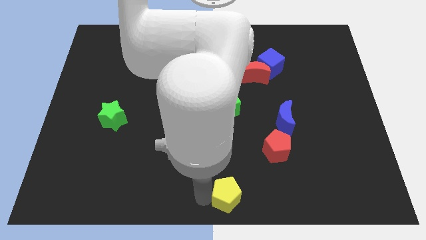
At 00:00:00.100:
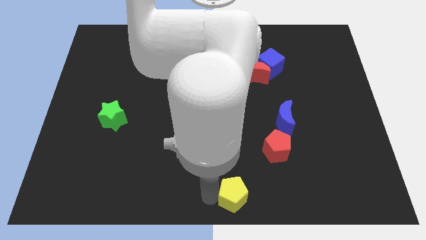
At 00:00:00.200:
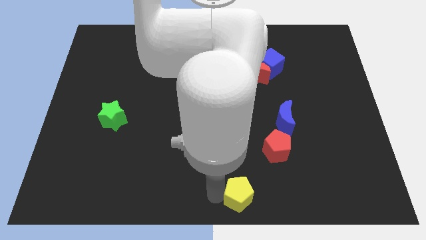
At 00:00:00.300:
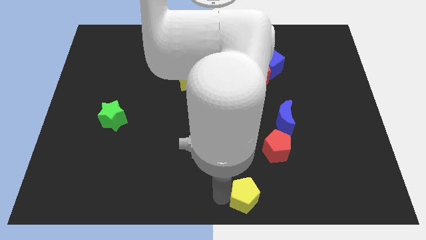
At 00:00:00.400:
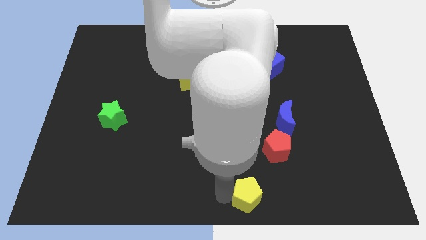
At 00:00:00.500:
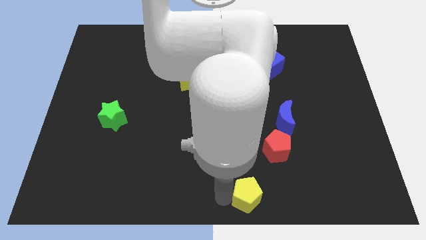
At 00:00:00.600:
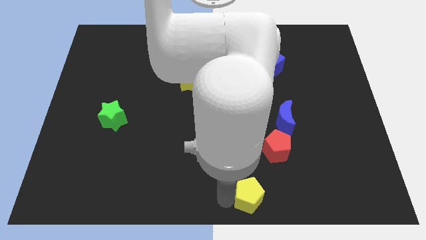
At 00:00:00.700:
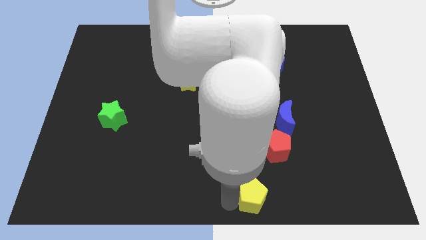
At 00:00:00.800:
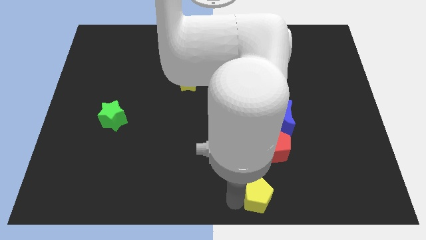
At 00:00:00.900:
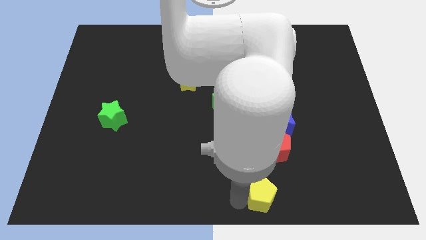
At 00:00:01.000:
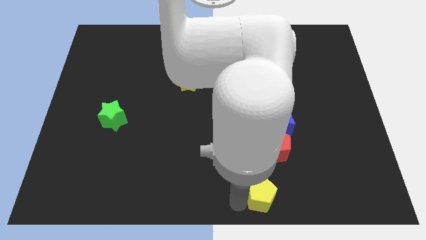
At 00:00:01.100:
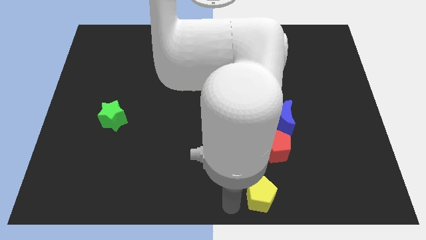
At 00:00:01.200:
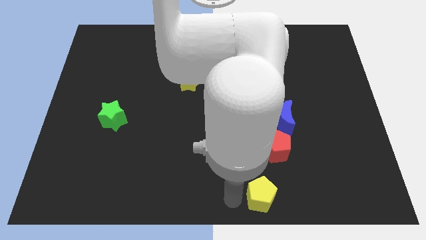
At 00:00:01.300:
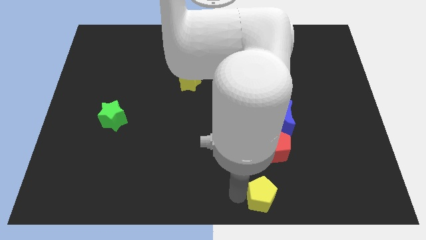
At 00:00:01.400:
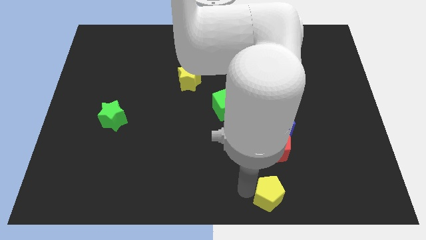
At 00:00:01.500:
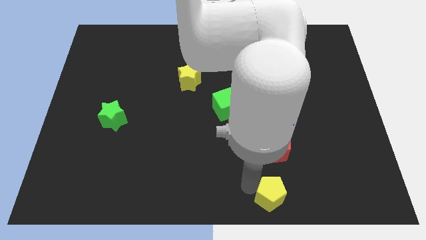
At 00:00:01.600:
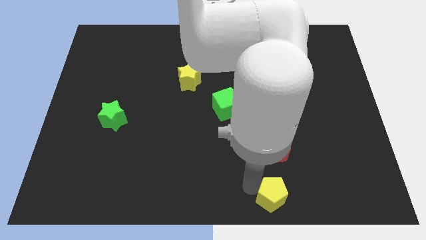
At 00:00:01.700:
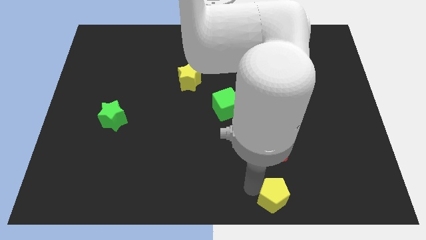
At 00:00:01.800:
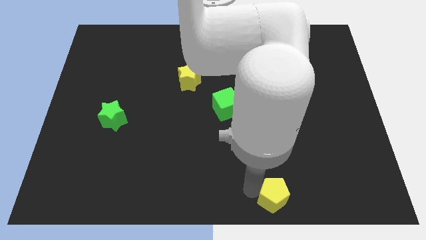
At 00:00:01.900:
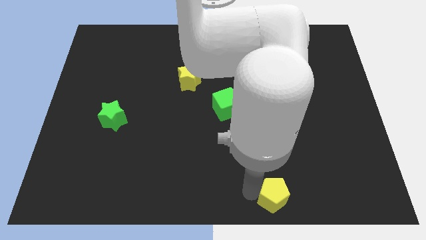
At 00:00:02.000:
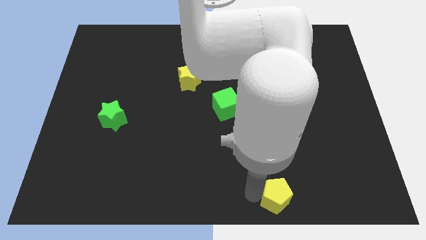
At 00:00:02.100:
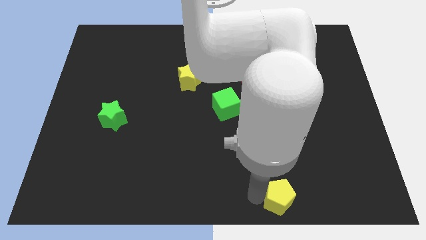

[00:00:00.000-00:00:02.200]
put the yellow pentagon below the red pentagon

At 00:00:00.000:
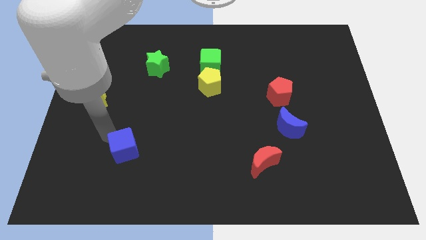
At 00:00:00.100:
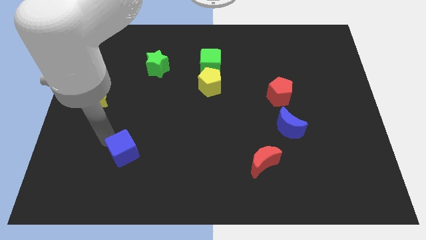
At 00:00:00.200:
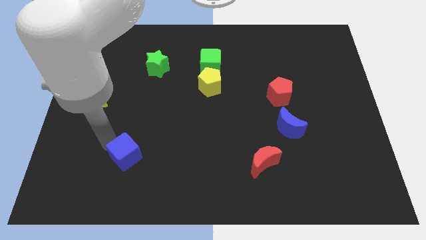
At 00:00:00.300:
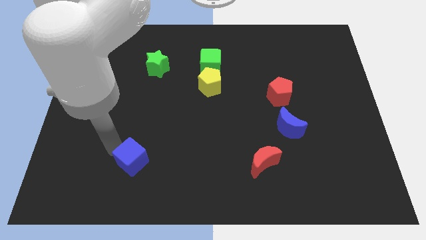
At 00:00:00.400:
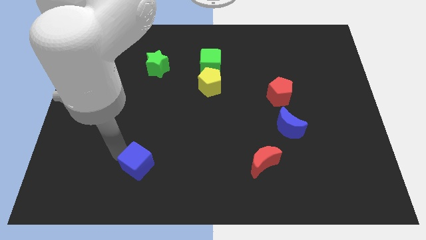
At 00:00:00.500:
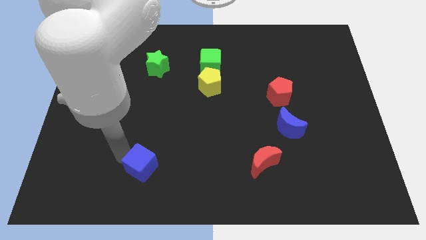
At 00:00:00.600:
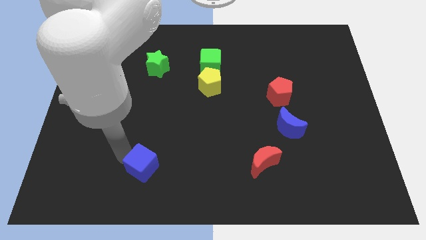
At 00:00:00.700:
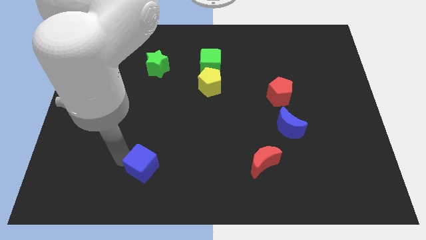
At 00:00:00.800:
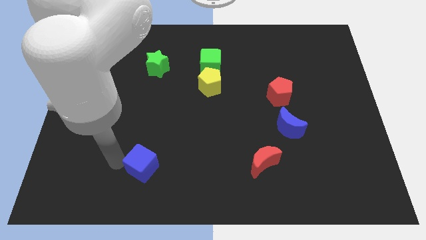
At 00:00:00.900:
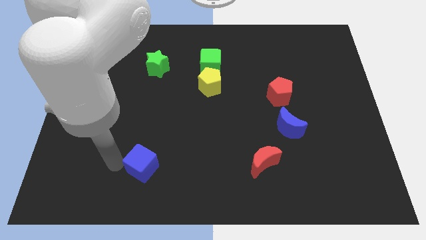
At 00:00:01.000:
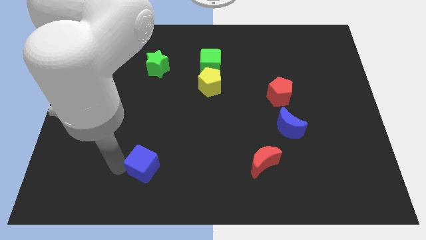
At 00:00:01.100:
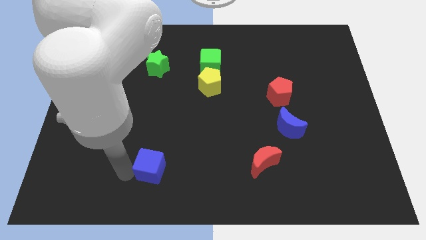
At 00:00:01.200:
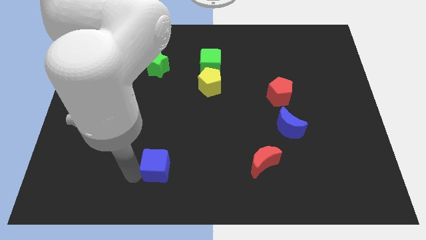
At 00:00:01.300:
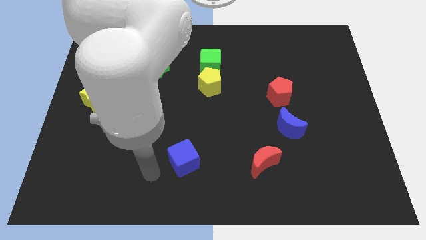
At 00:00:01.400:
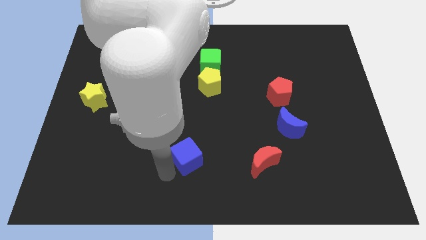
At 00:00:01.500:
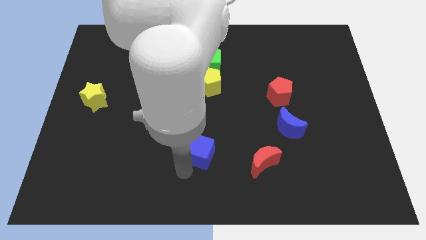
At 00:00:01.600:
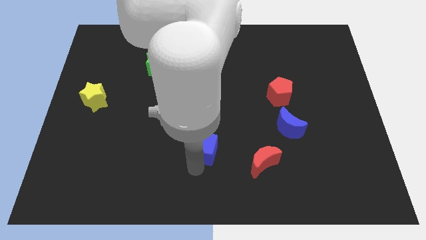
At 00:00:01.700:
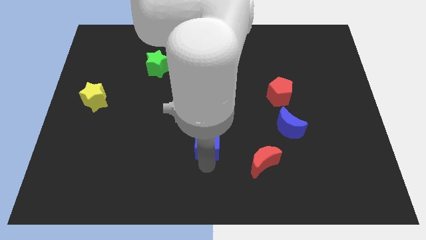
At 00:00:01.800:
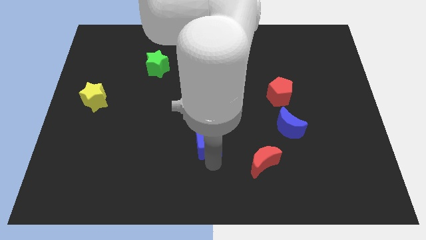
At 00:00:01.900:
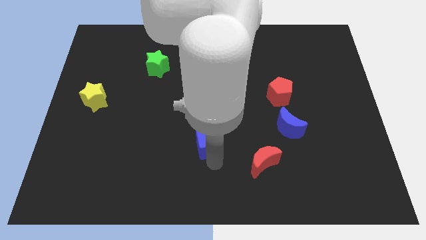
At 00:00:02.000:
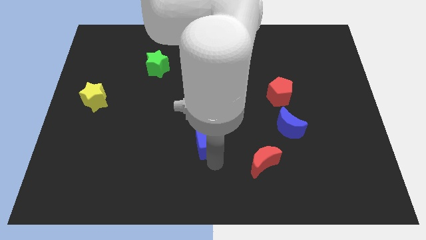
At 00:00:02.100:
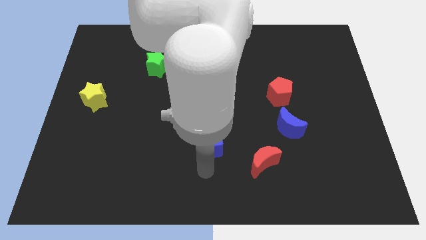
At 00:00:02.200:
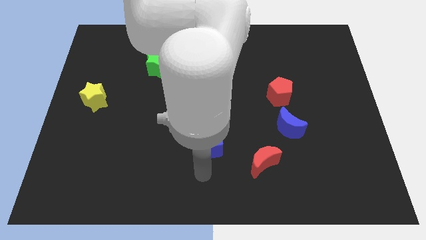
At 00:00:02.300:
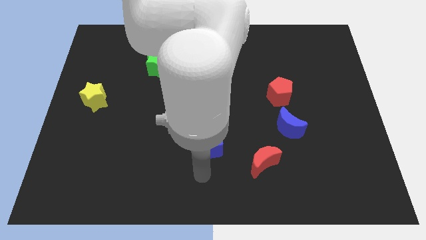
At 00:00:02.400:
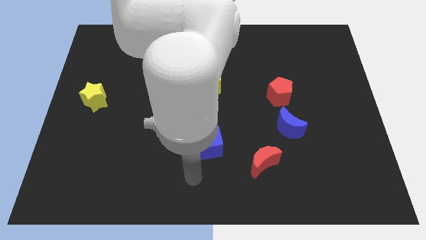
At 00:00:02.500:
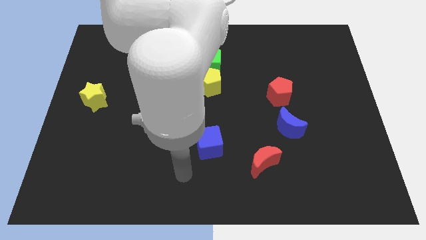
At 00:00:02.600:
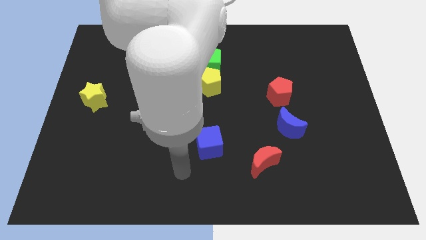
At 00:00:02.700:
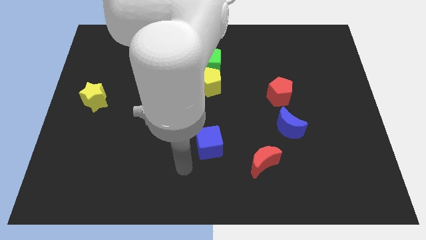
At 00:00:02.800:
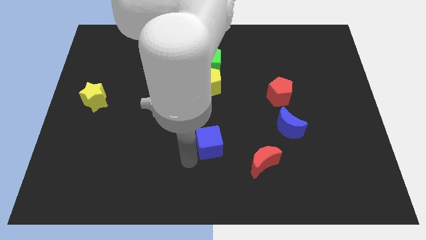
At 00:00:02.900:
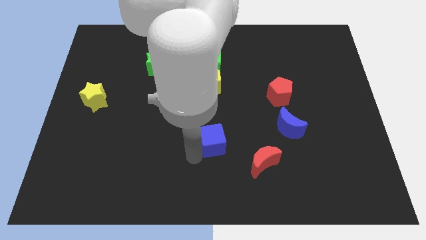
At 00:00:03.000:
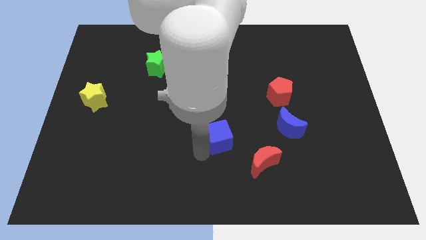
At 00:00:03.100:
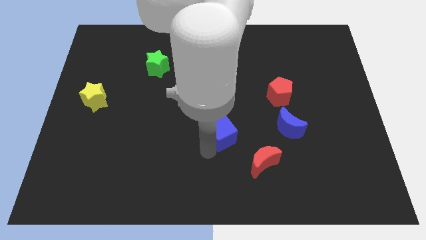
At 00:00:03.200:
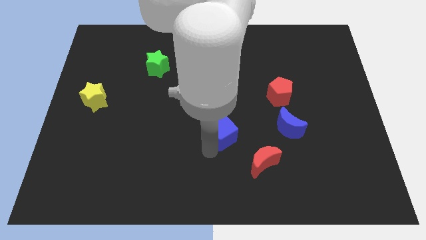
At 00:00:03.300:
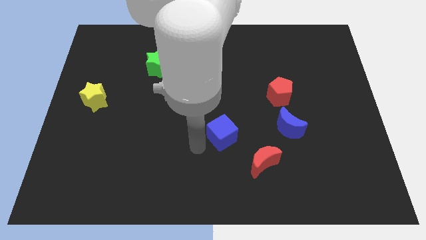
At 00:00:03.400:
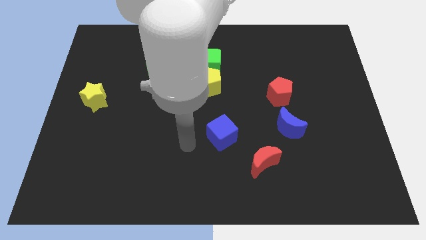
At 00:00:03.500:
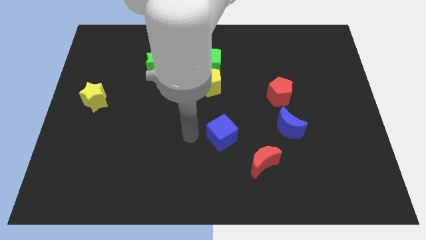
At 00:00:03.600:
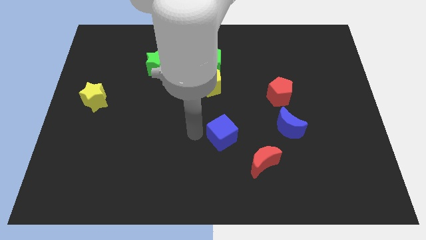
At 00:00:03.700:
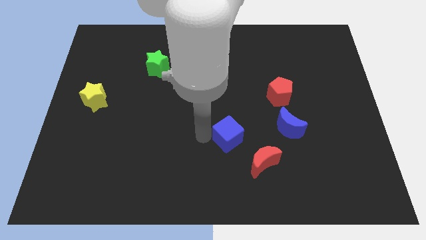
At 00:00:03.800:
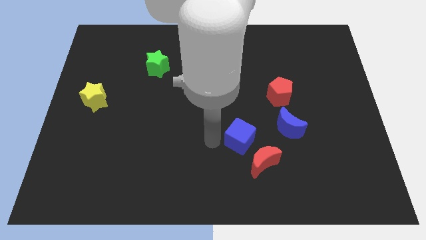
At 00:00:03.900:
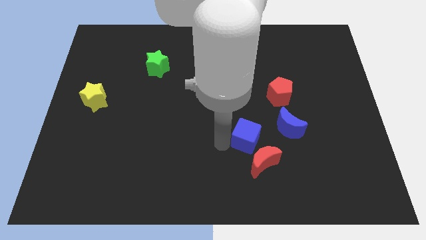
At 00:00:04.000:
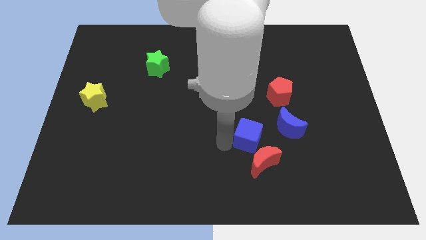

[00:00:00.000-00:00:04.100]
push the blue cube above the red crescent

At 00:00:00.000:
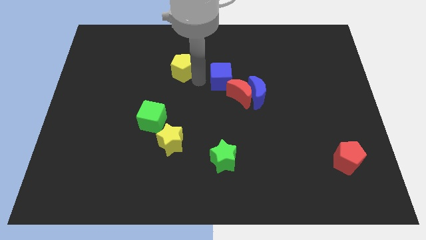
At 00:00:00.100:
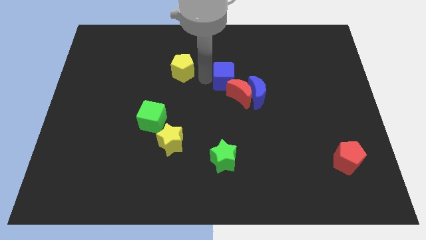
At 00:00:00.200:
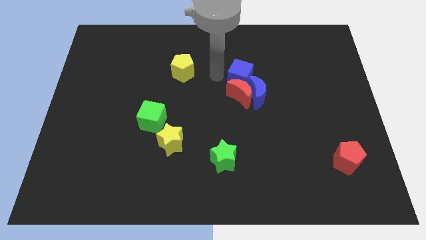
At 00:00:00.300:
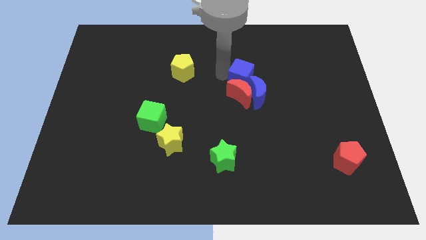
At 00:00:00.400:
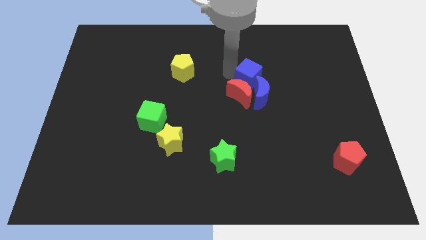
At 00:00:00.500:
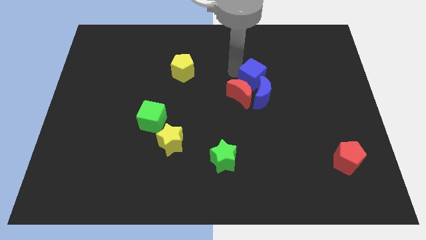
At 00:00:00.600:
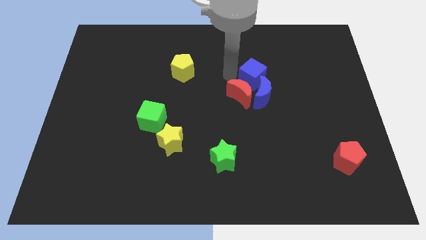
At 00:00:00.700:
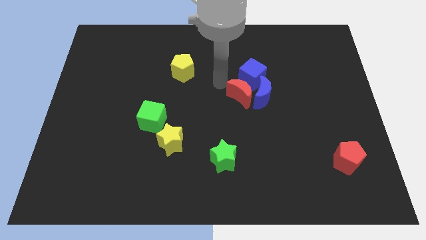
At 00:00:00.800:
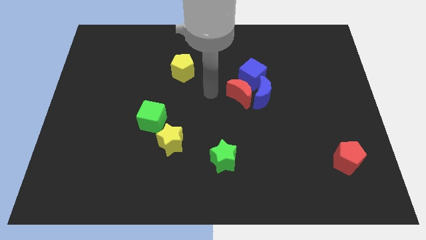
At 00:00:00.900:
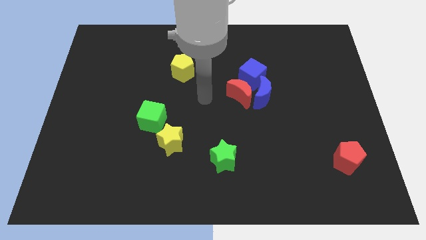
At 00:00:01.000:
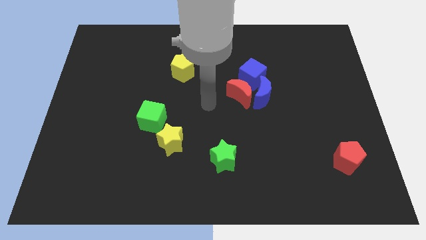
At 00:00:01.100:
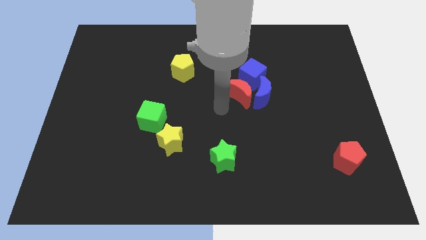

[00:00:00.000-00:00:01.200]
place the blue cube above the blue crescent

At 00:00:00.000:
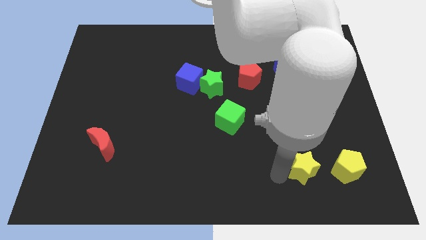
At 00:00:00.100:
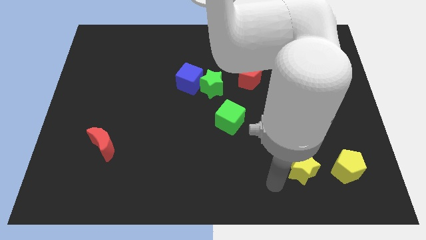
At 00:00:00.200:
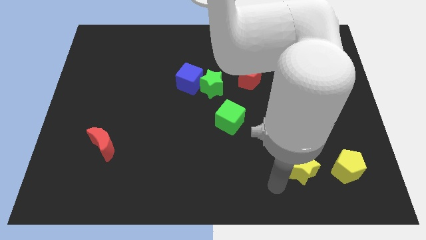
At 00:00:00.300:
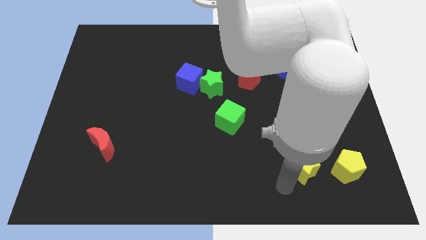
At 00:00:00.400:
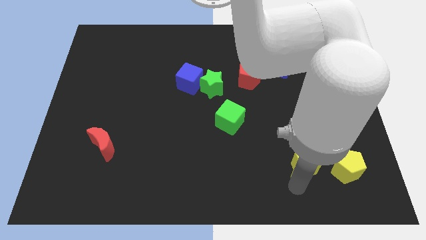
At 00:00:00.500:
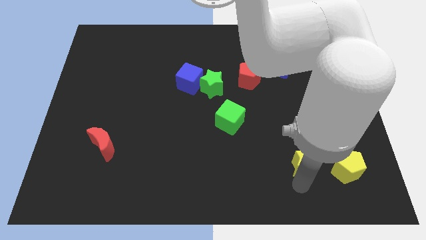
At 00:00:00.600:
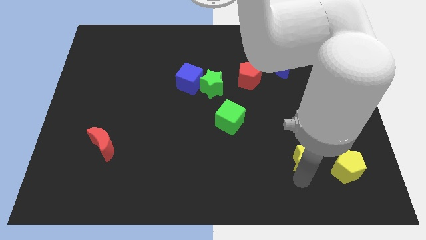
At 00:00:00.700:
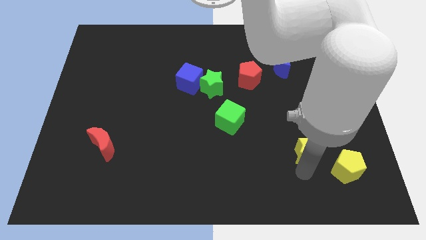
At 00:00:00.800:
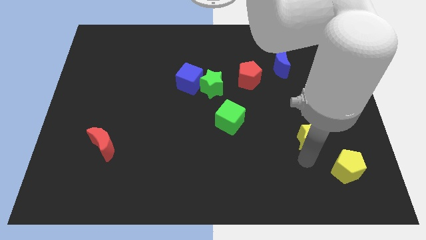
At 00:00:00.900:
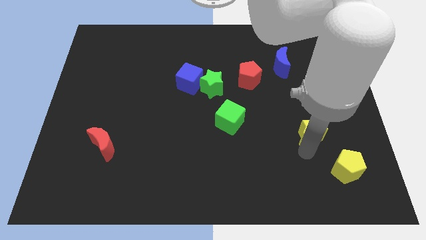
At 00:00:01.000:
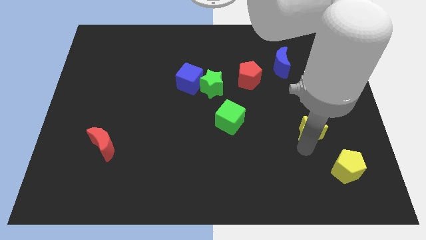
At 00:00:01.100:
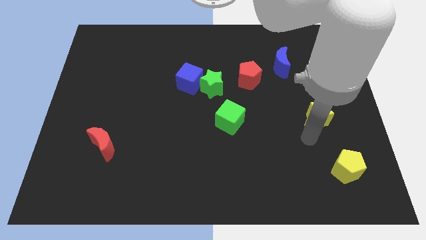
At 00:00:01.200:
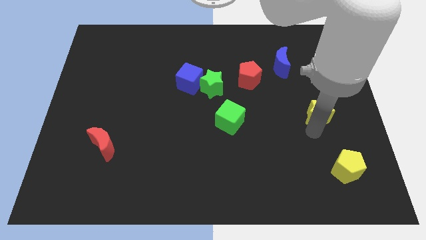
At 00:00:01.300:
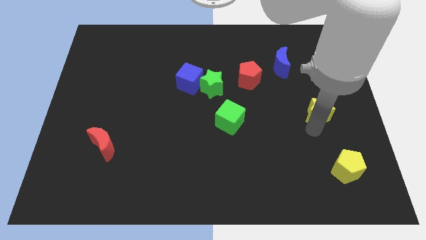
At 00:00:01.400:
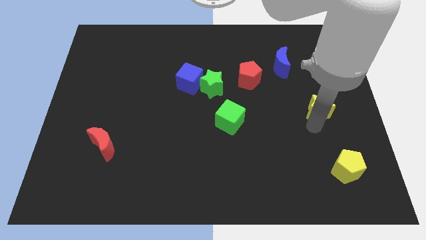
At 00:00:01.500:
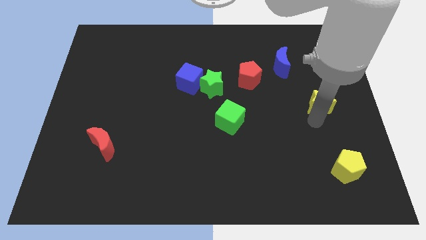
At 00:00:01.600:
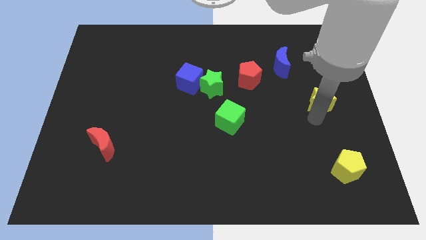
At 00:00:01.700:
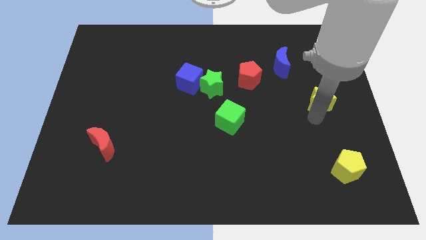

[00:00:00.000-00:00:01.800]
push yellow star slightly towards up
